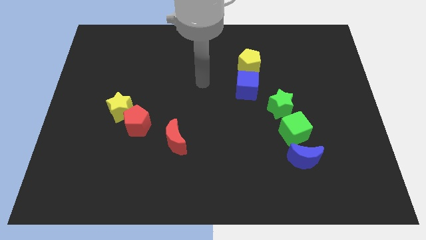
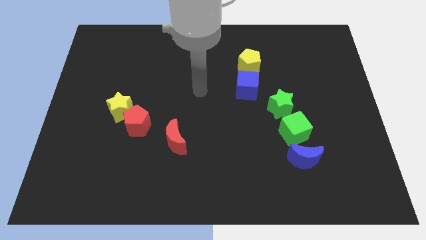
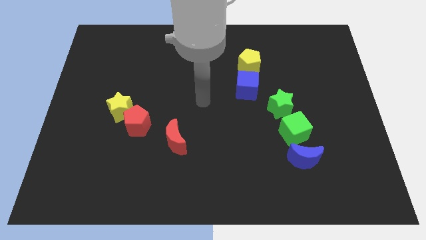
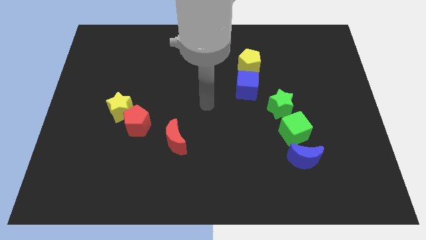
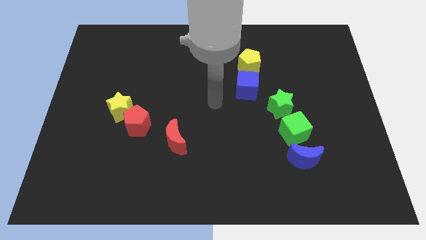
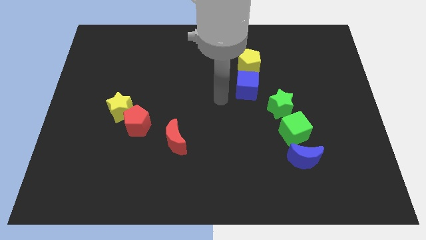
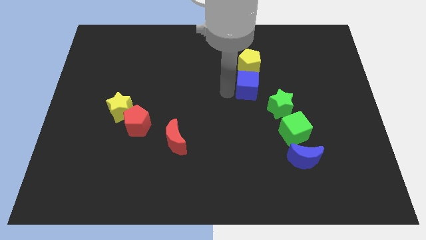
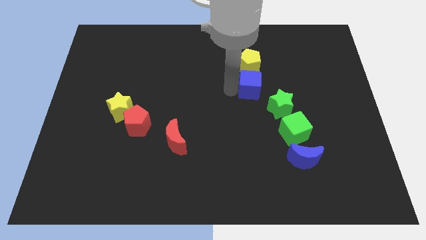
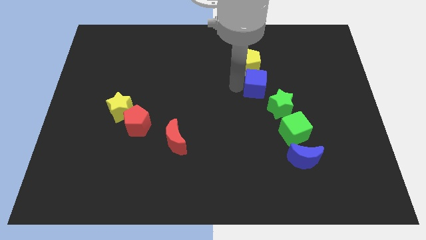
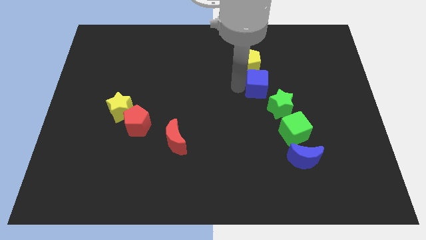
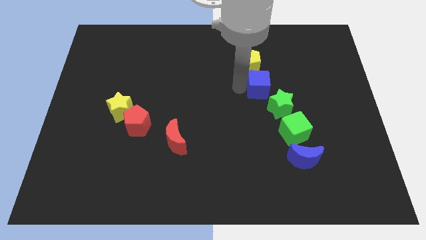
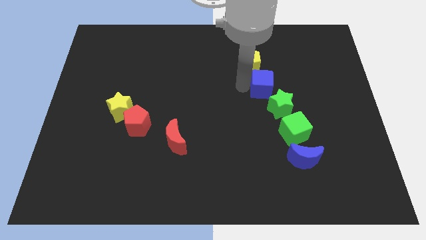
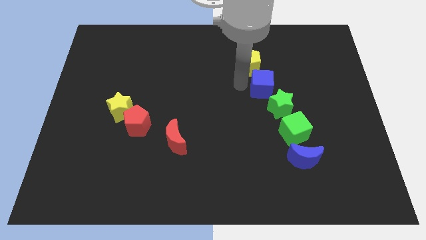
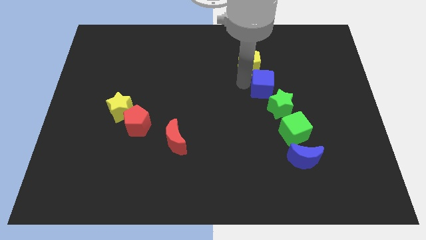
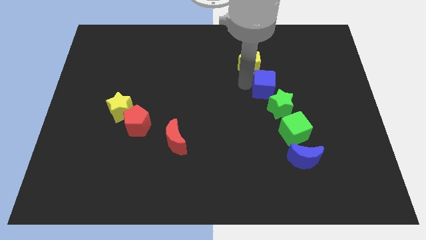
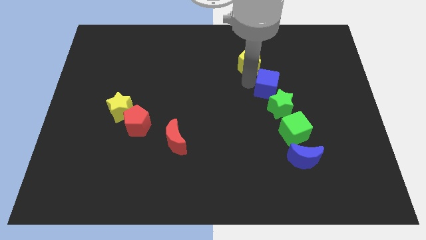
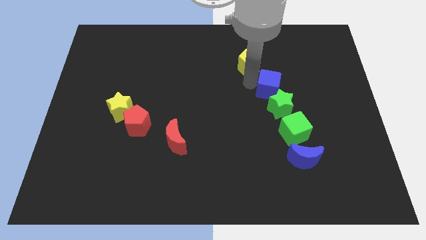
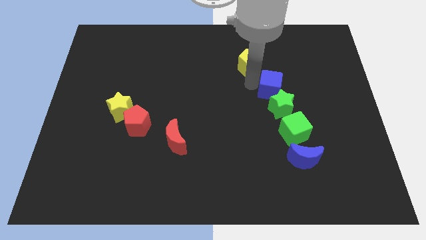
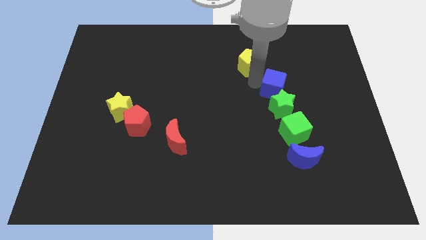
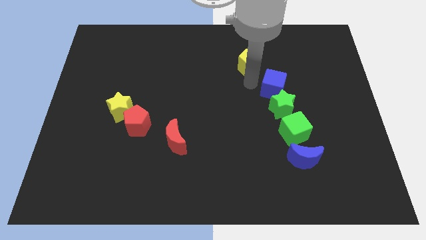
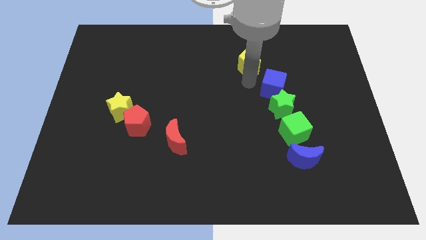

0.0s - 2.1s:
slide blue cube into green star

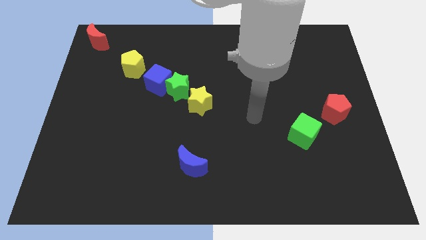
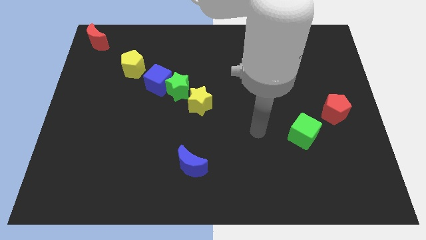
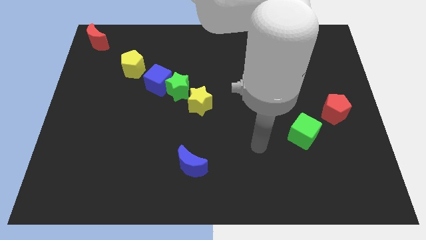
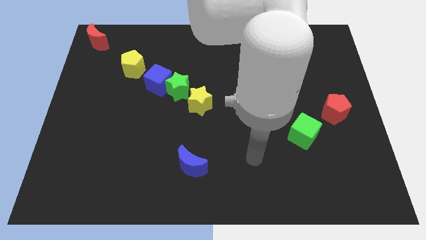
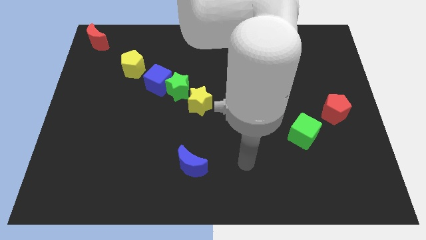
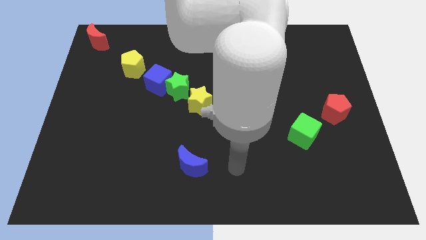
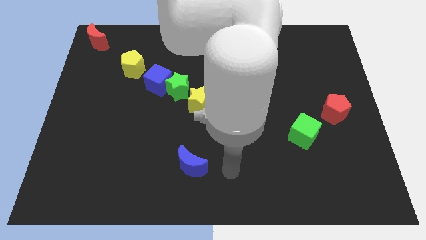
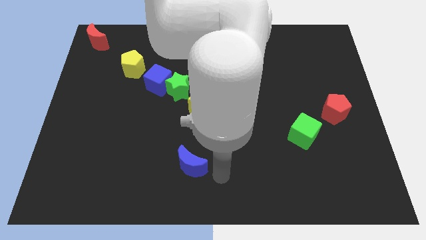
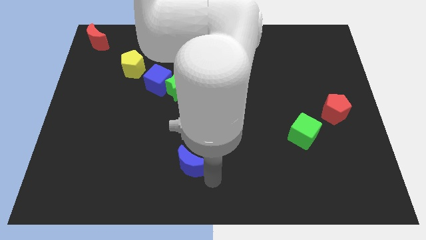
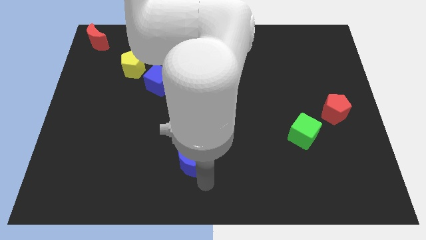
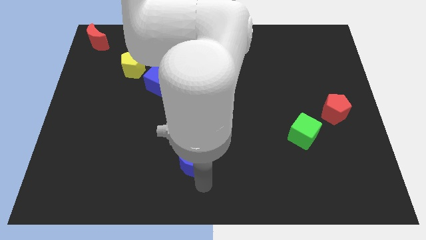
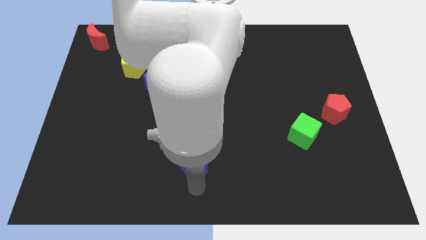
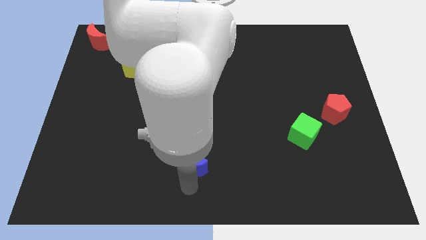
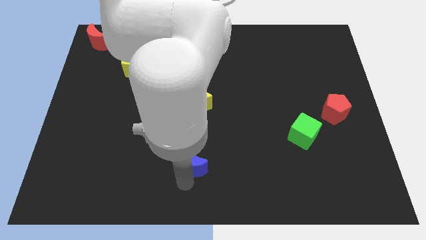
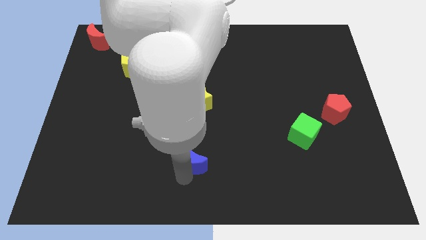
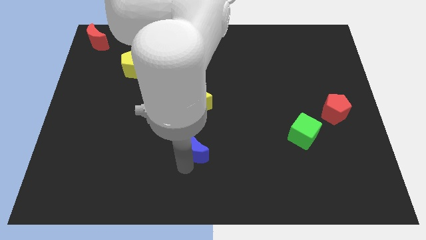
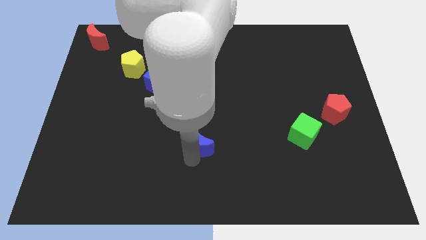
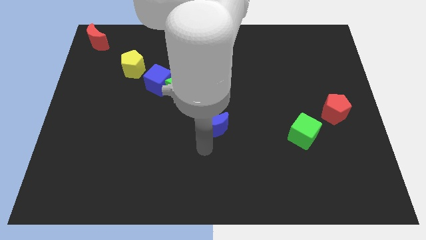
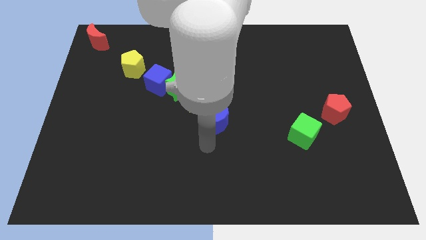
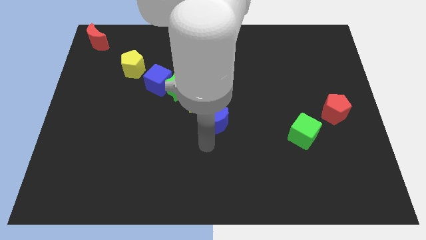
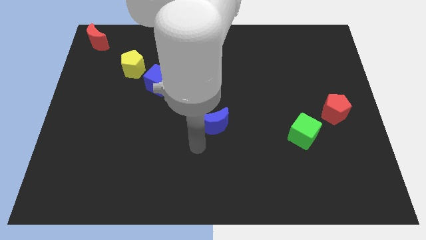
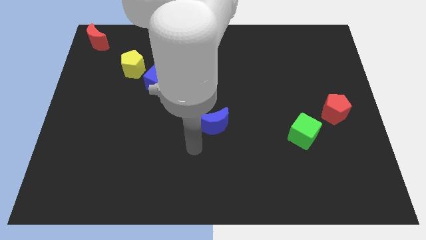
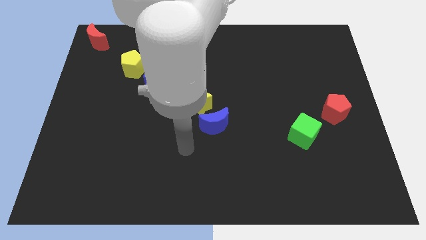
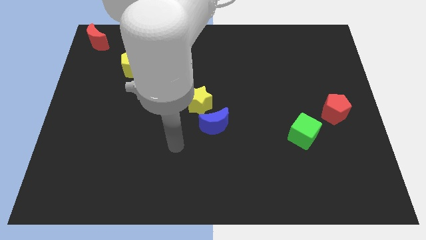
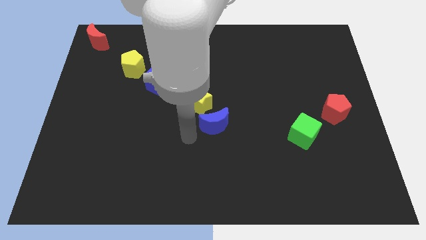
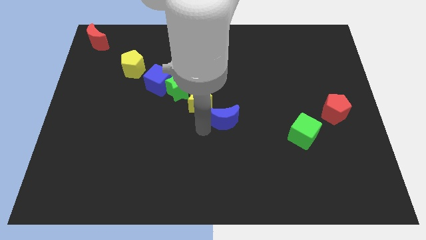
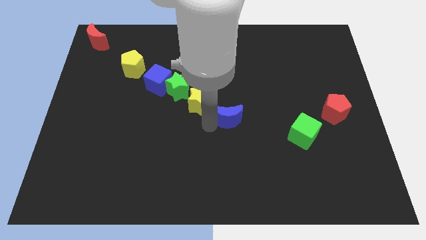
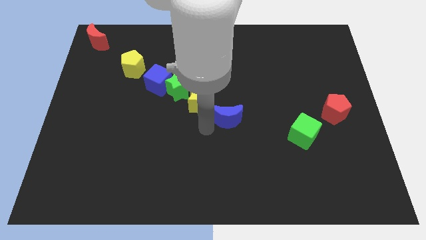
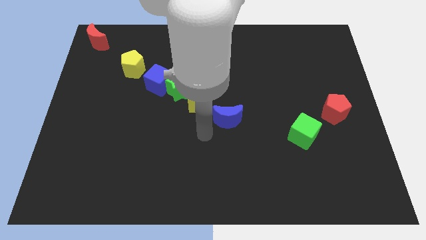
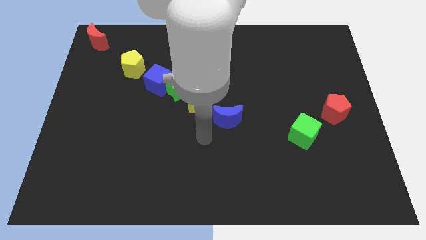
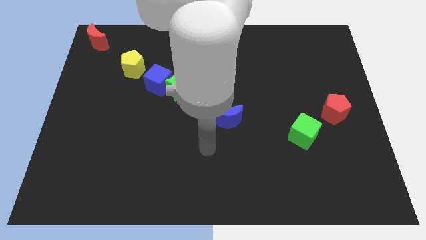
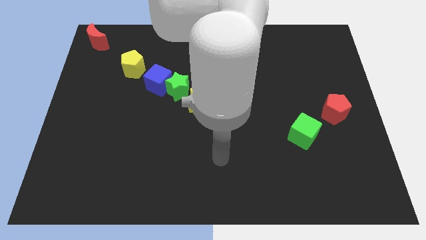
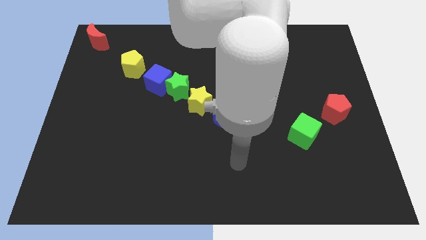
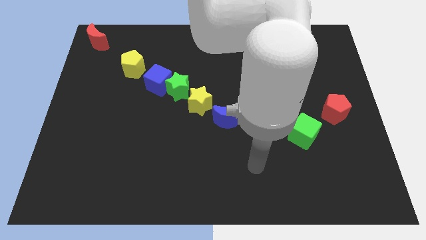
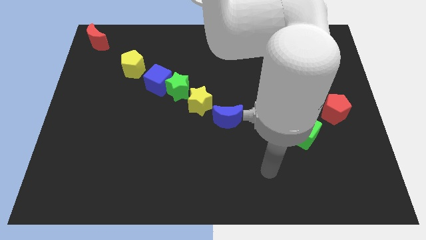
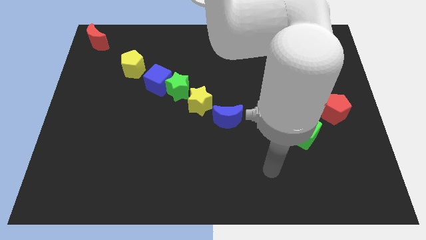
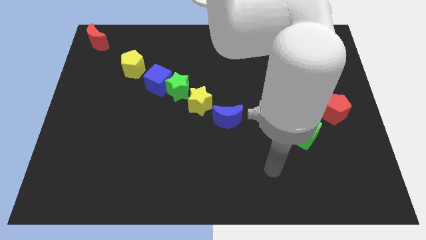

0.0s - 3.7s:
place the blue moon below the yellow star

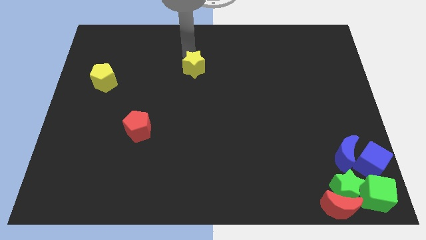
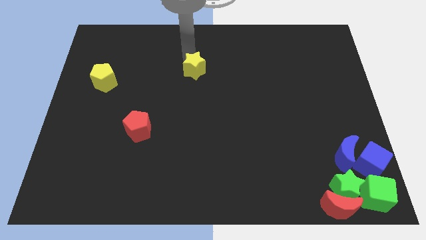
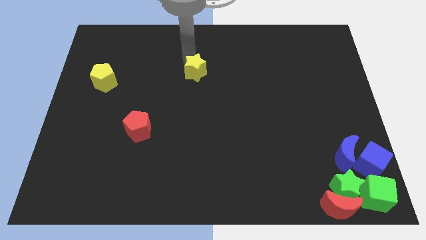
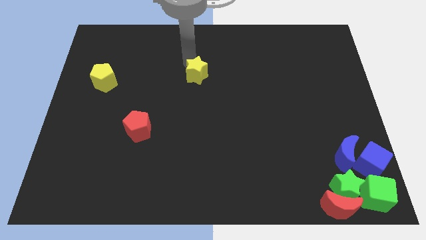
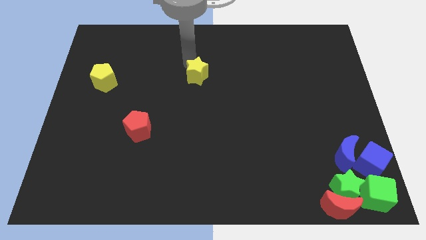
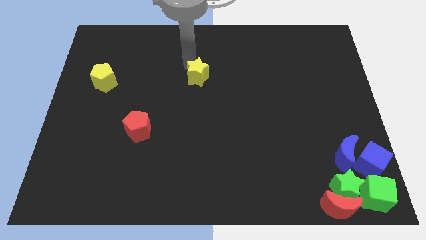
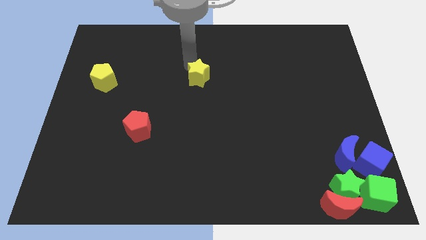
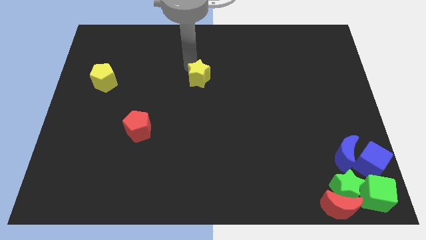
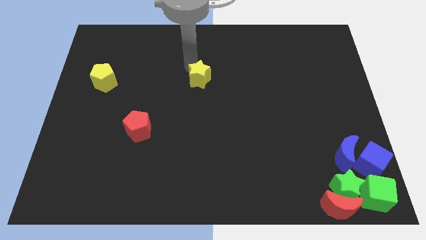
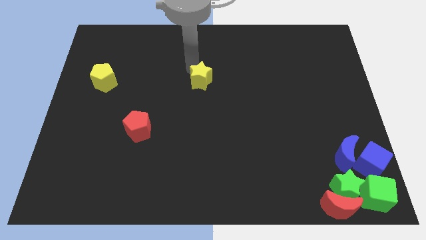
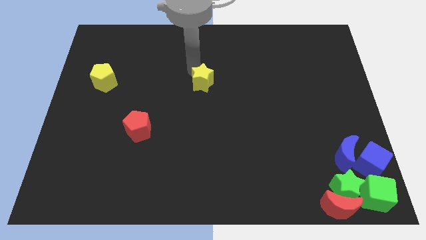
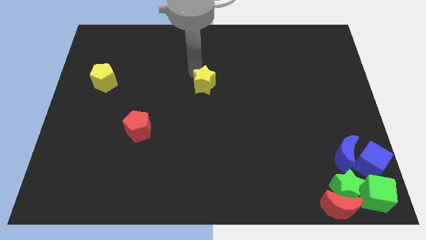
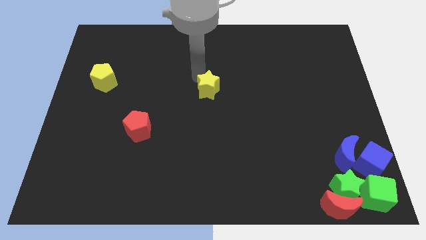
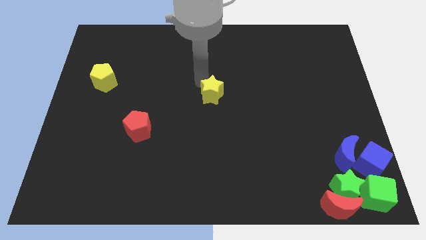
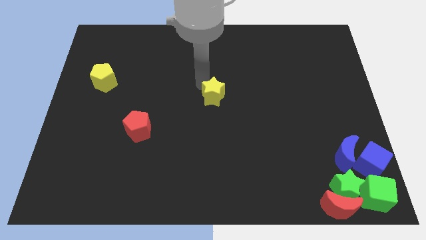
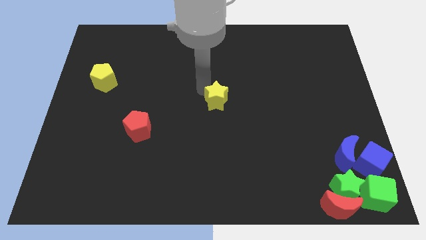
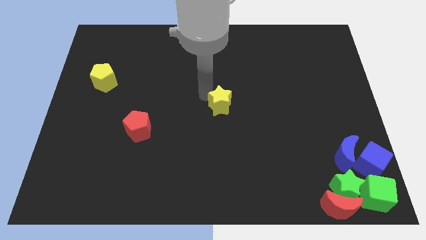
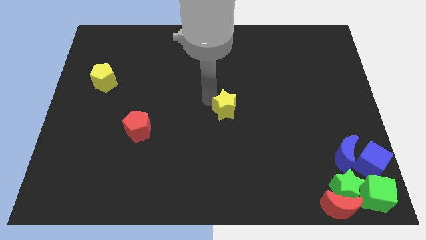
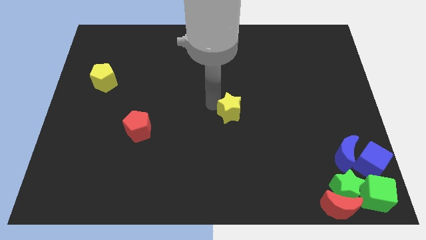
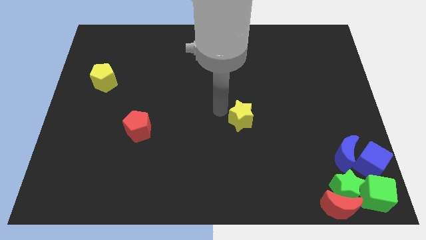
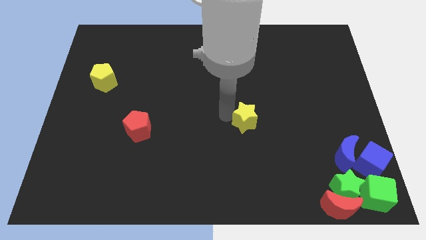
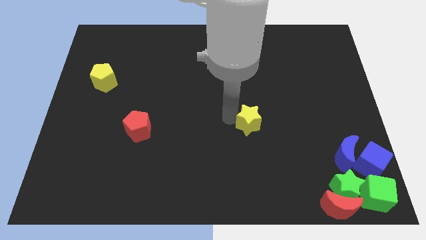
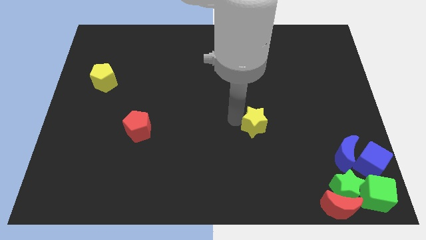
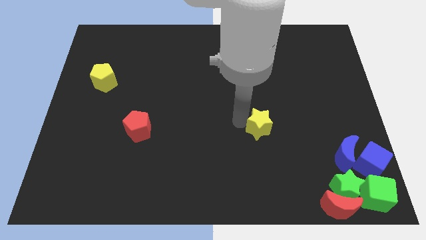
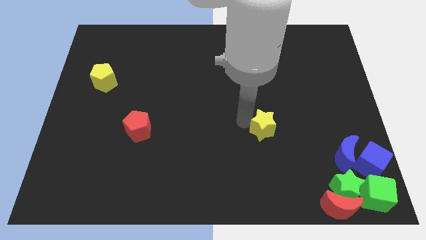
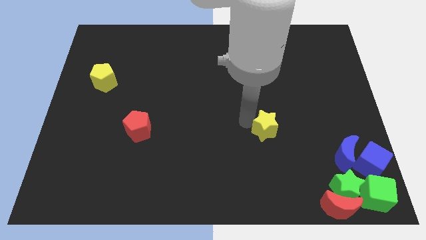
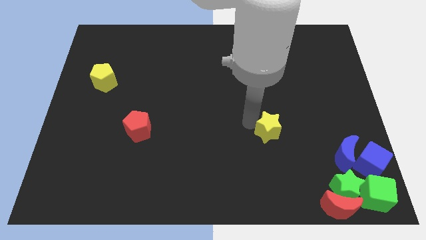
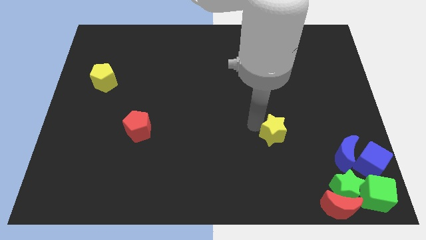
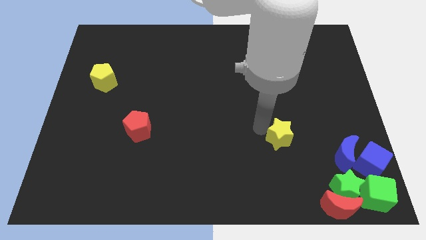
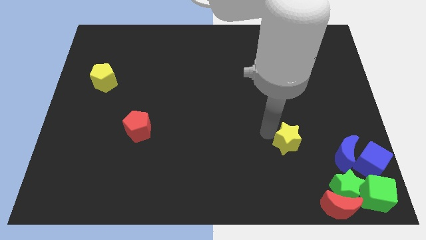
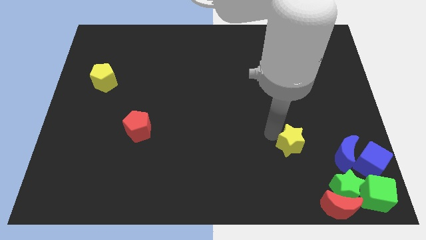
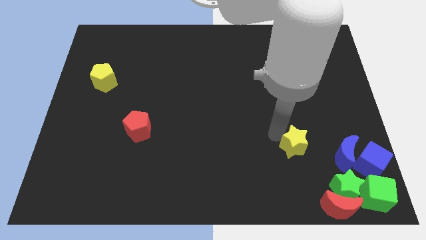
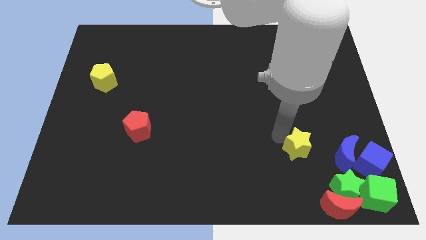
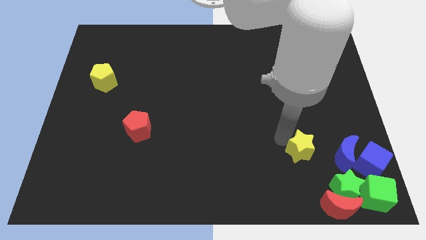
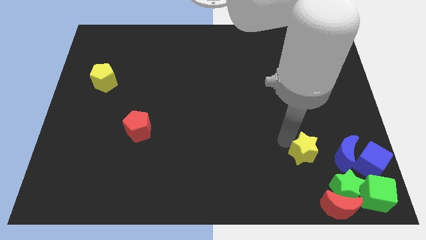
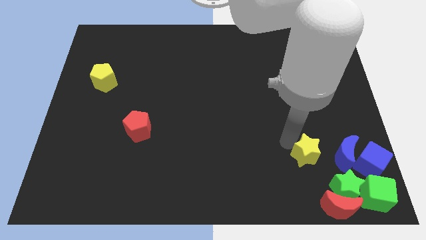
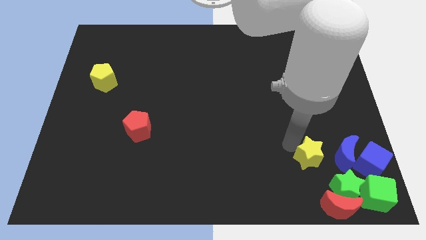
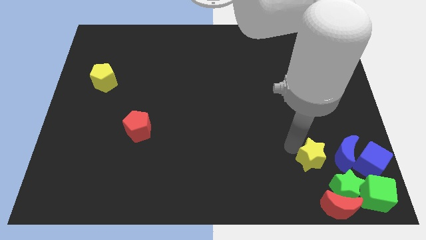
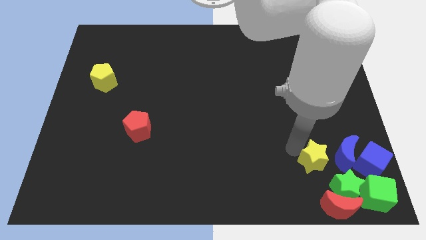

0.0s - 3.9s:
move the yellow star left to the blue moon
